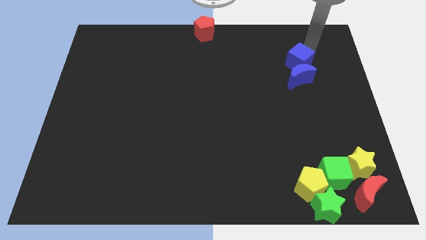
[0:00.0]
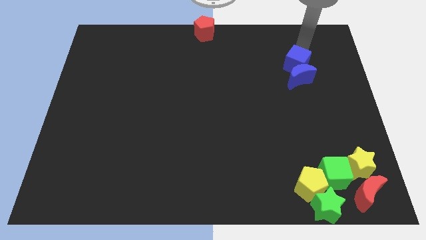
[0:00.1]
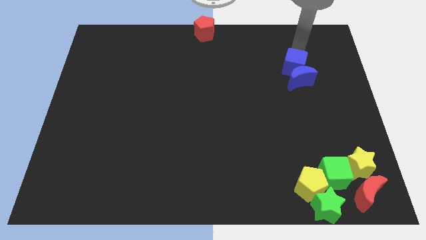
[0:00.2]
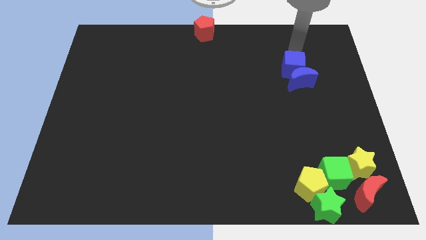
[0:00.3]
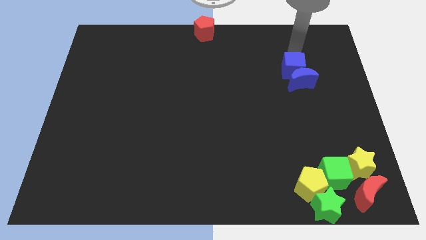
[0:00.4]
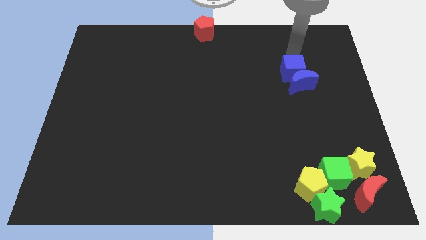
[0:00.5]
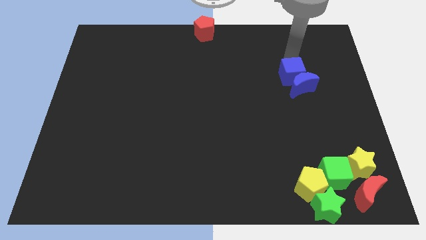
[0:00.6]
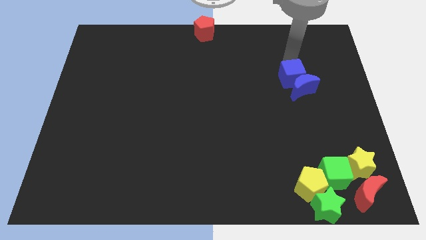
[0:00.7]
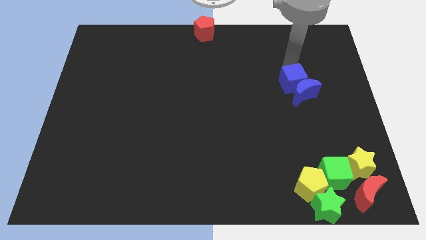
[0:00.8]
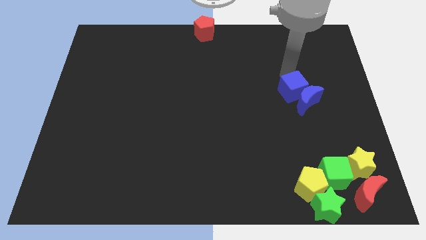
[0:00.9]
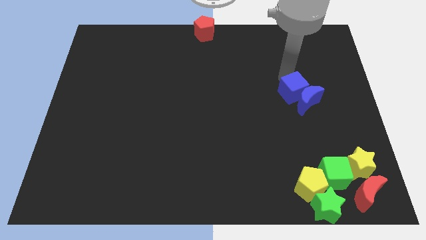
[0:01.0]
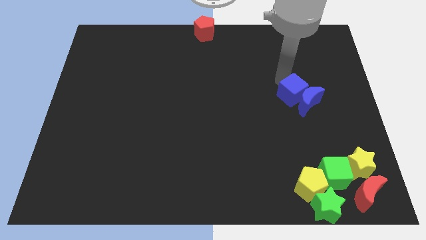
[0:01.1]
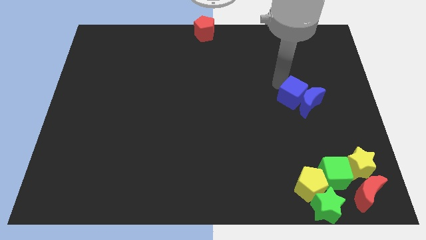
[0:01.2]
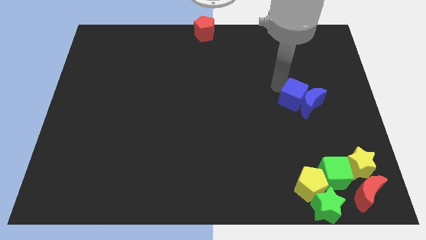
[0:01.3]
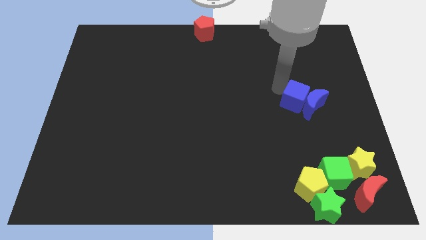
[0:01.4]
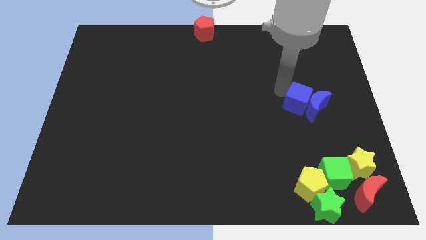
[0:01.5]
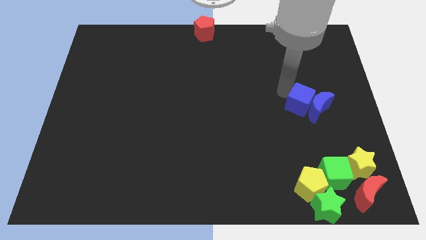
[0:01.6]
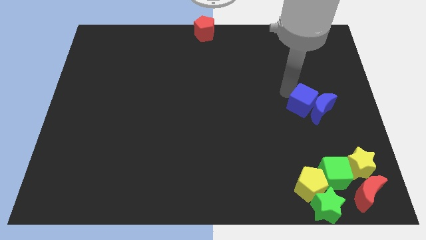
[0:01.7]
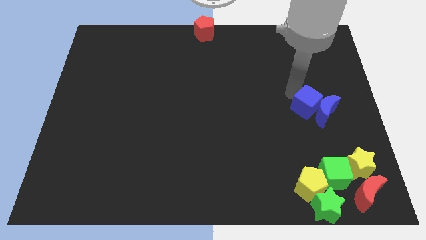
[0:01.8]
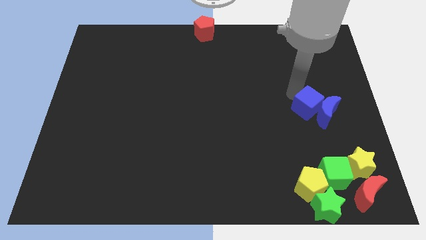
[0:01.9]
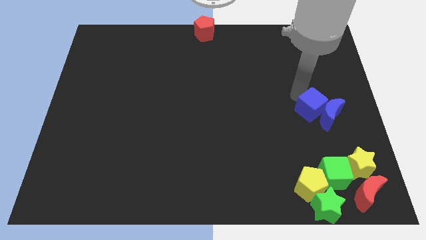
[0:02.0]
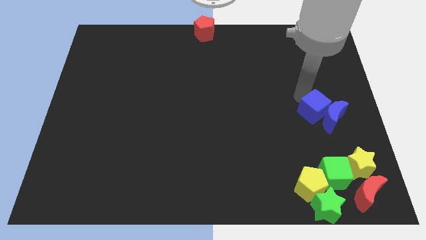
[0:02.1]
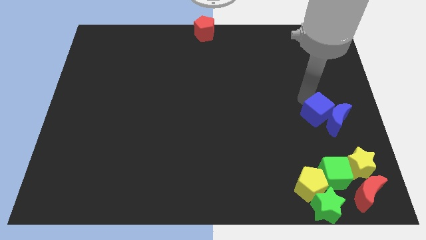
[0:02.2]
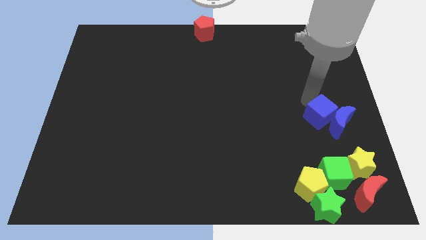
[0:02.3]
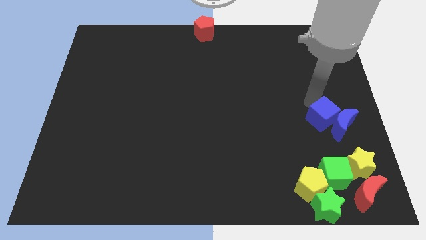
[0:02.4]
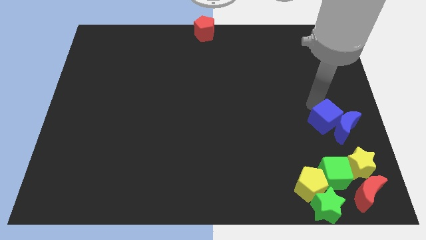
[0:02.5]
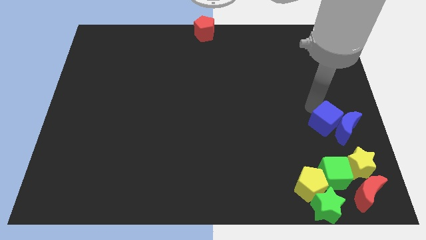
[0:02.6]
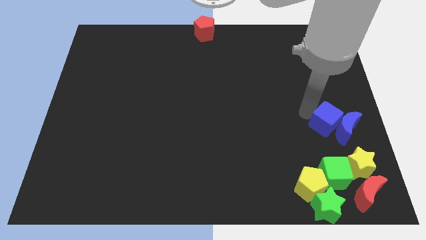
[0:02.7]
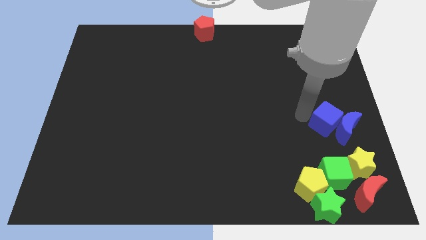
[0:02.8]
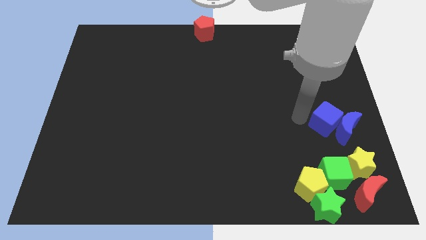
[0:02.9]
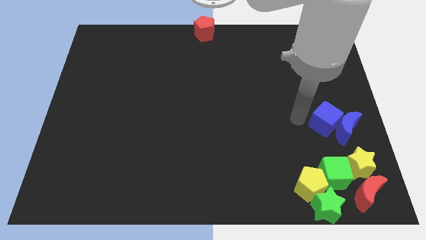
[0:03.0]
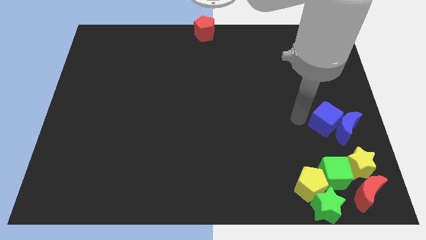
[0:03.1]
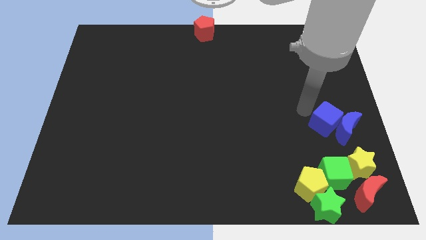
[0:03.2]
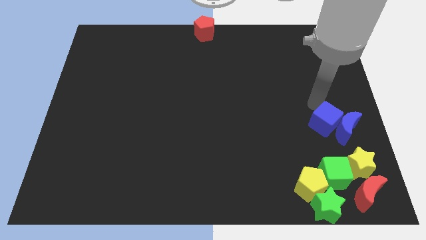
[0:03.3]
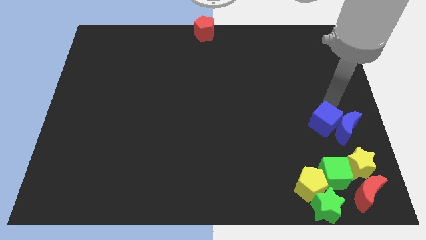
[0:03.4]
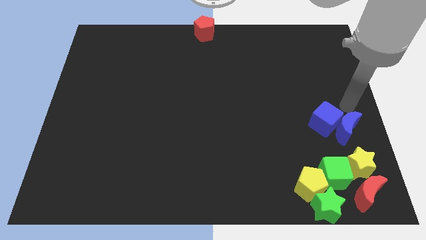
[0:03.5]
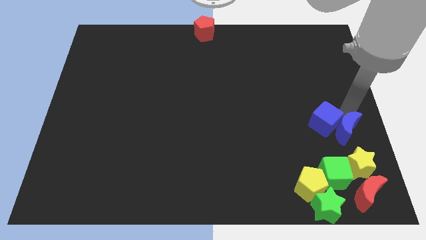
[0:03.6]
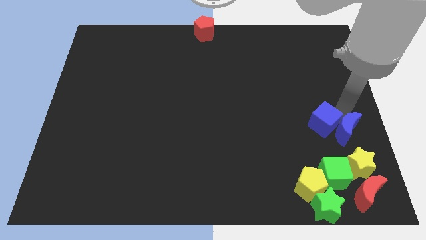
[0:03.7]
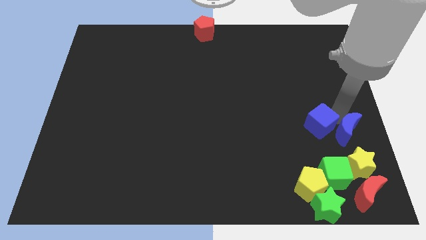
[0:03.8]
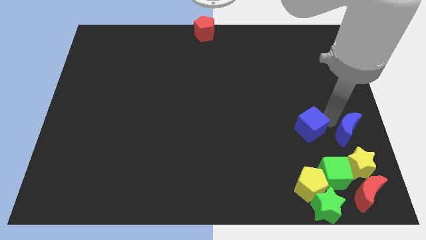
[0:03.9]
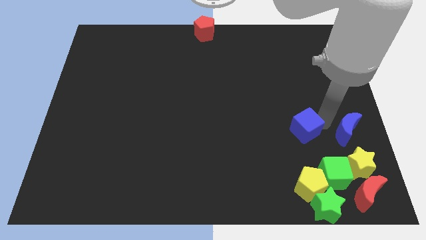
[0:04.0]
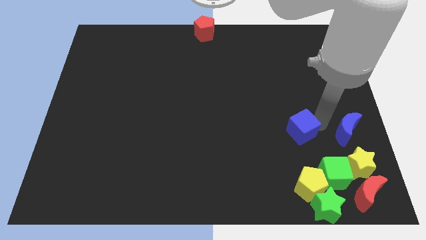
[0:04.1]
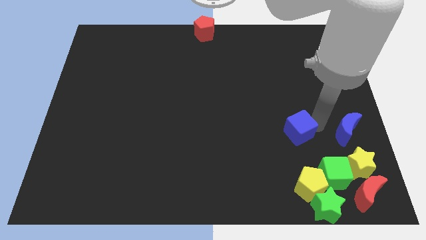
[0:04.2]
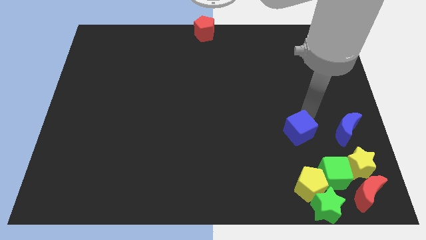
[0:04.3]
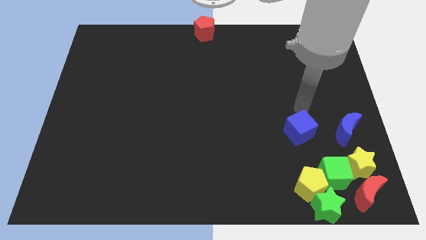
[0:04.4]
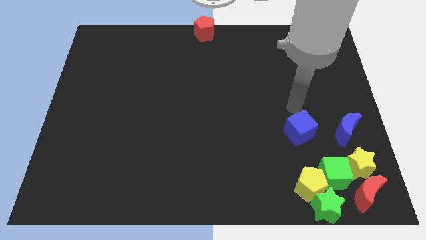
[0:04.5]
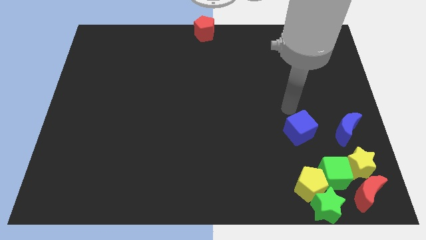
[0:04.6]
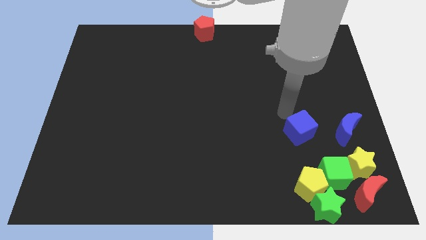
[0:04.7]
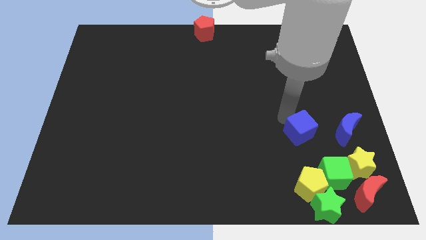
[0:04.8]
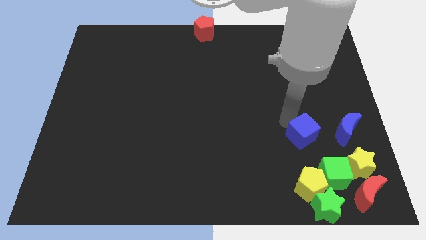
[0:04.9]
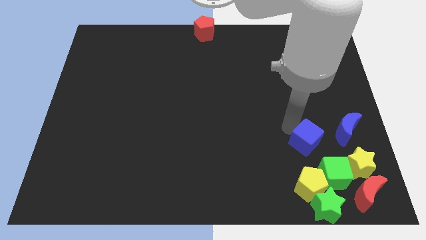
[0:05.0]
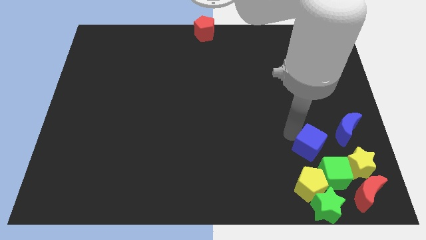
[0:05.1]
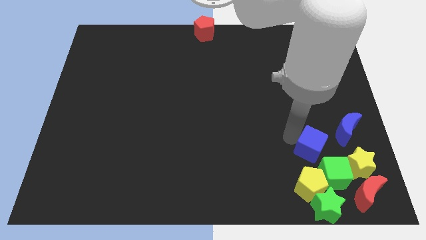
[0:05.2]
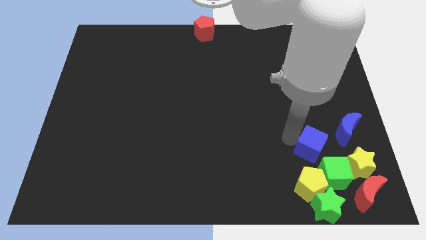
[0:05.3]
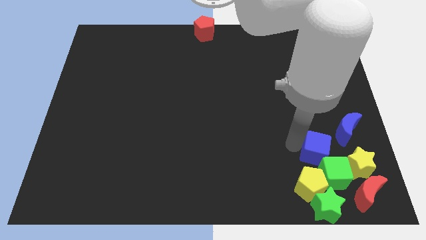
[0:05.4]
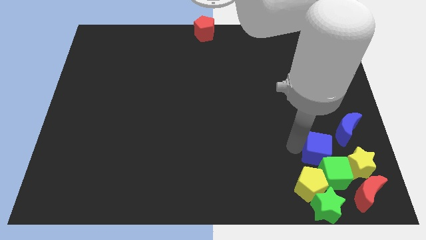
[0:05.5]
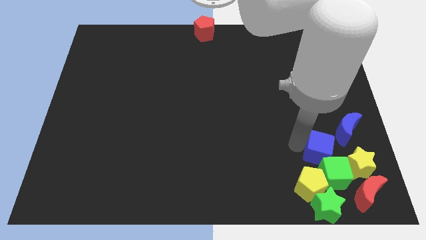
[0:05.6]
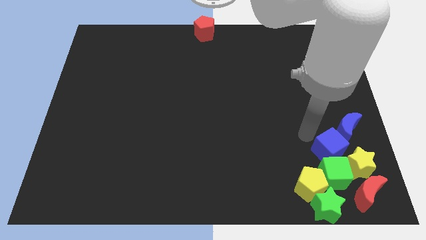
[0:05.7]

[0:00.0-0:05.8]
push the blue cube towards the group of block

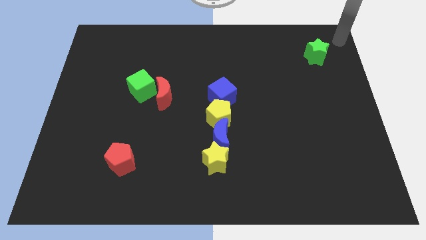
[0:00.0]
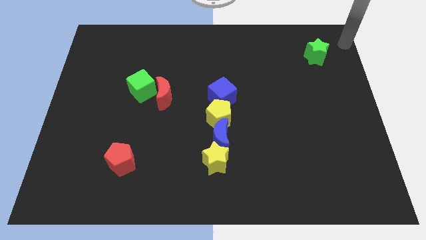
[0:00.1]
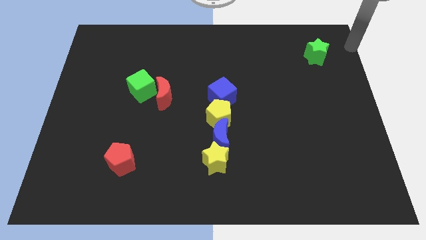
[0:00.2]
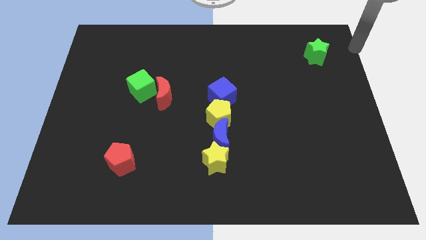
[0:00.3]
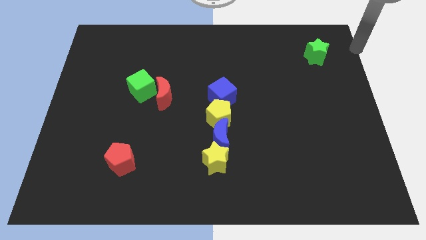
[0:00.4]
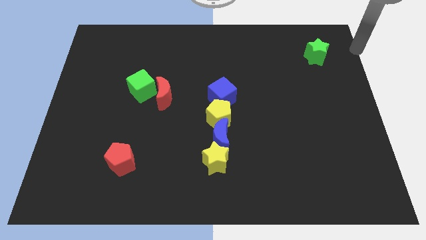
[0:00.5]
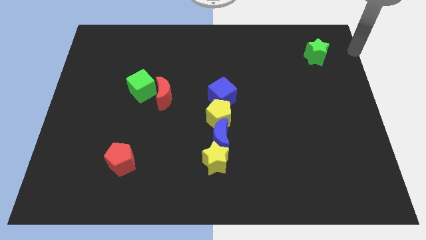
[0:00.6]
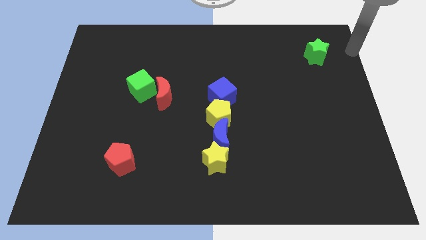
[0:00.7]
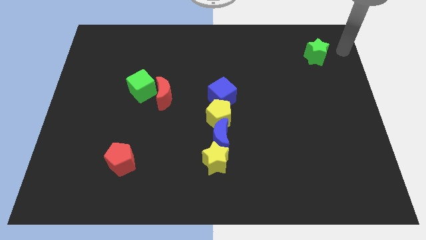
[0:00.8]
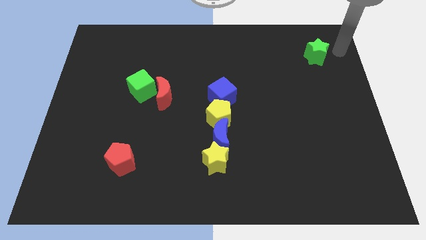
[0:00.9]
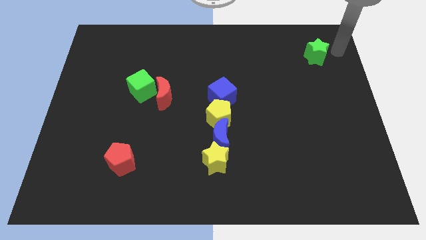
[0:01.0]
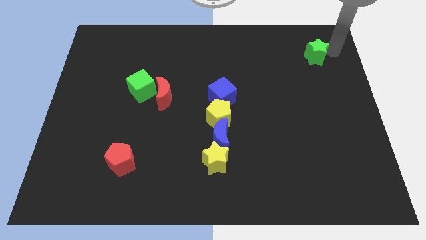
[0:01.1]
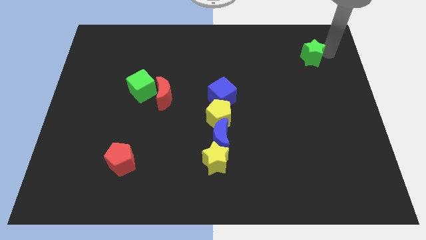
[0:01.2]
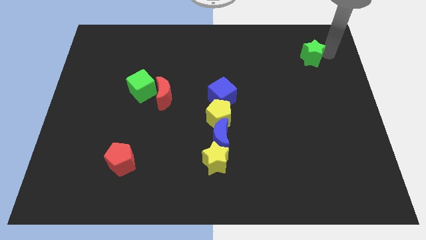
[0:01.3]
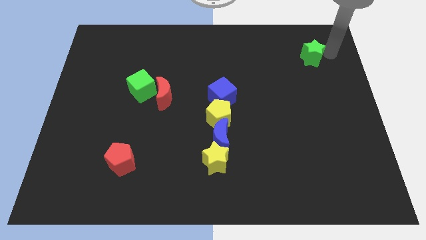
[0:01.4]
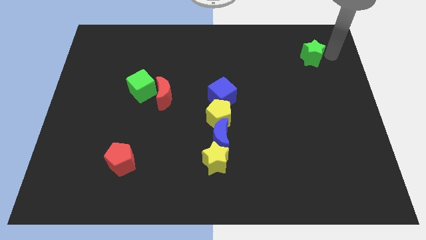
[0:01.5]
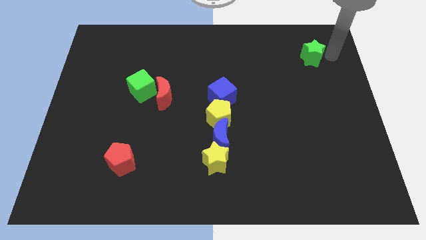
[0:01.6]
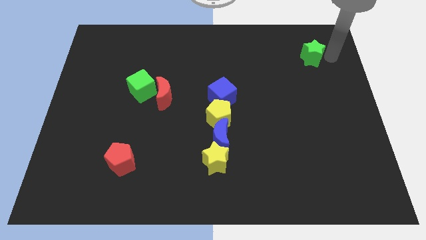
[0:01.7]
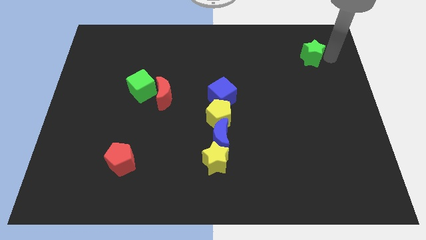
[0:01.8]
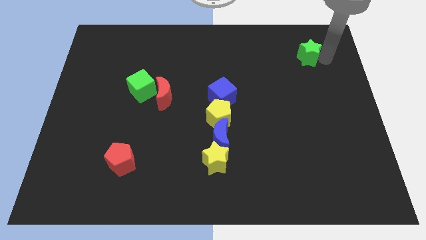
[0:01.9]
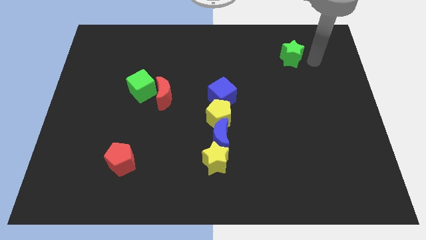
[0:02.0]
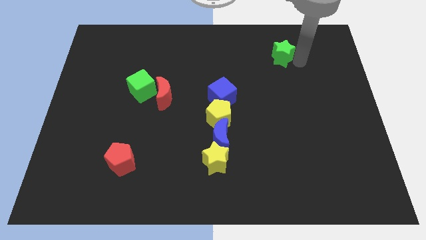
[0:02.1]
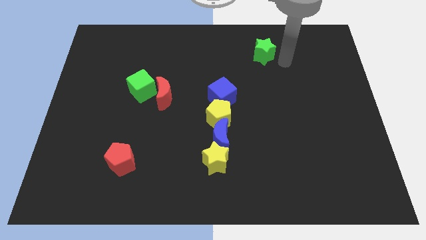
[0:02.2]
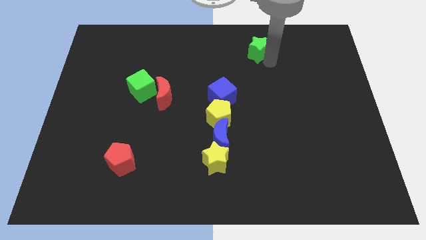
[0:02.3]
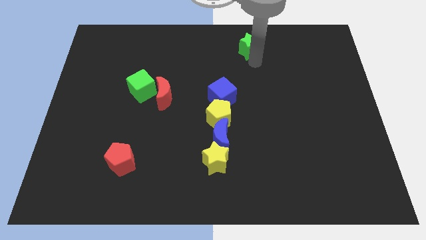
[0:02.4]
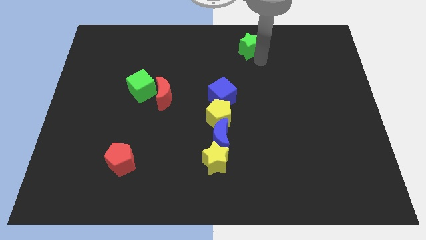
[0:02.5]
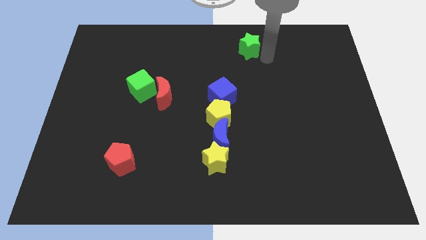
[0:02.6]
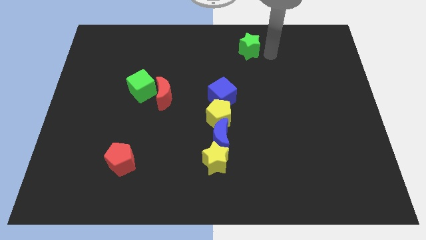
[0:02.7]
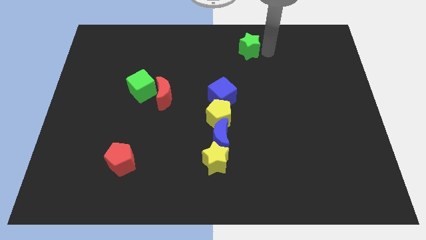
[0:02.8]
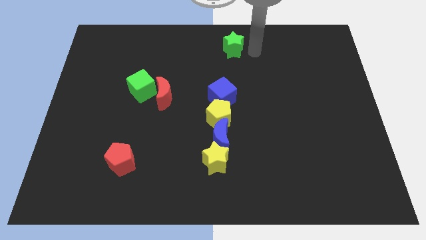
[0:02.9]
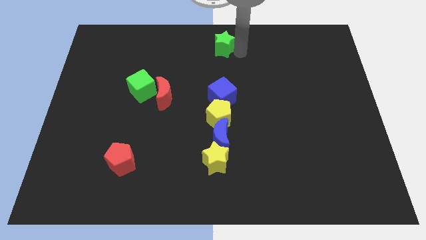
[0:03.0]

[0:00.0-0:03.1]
move the green star to the vertical top side of the blue cube

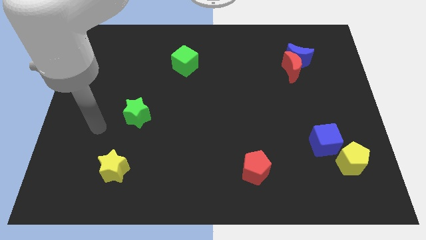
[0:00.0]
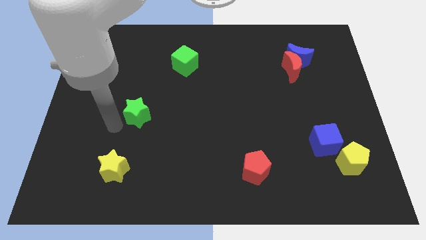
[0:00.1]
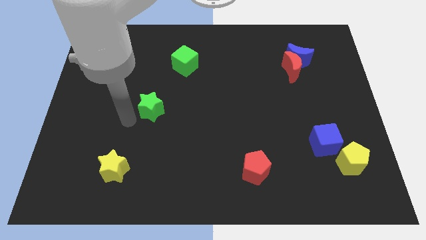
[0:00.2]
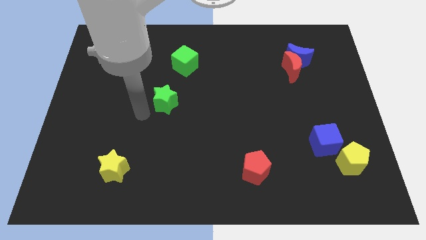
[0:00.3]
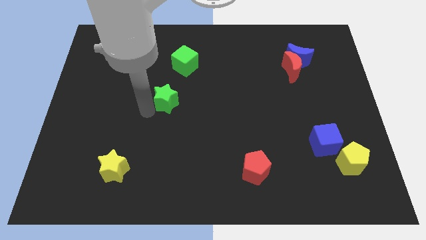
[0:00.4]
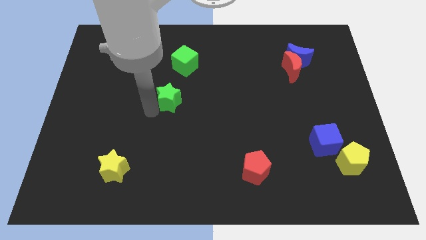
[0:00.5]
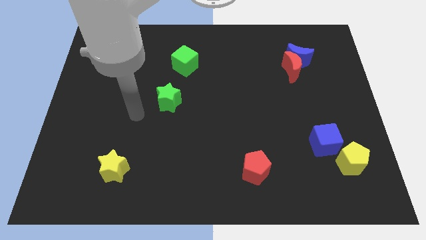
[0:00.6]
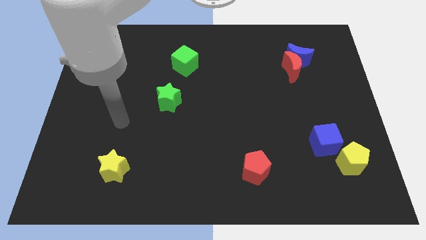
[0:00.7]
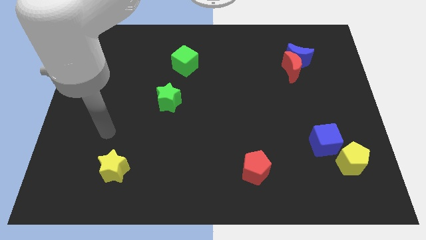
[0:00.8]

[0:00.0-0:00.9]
place green star to the bottom left of green cube
